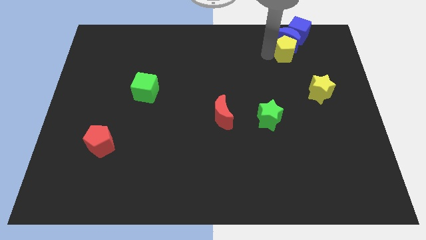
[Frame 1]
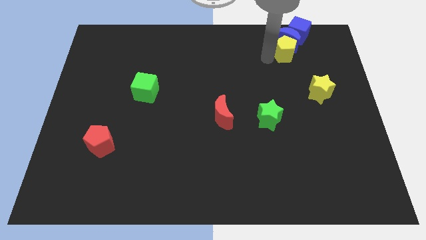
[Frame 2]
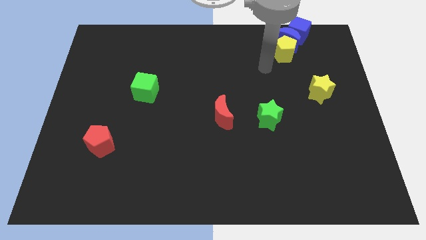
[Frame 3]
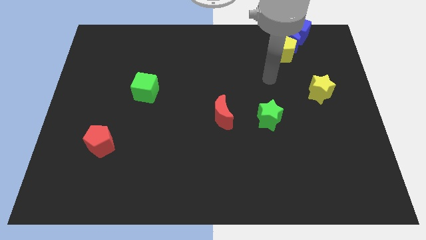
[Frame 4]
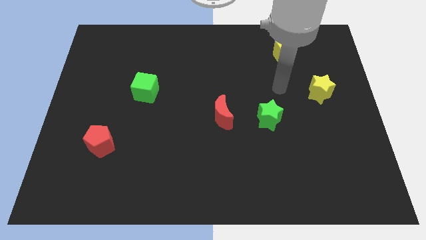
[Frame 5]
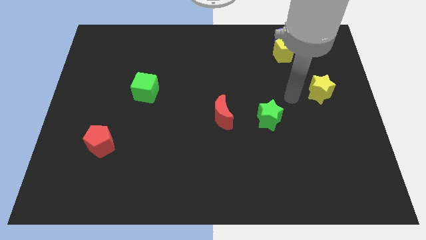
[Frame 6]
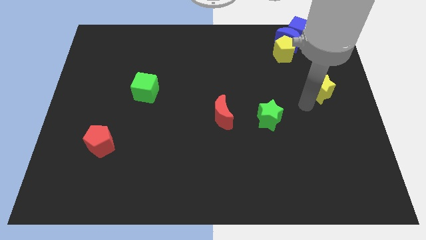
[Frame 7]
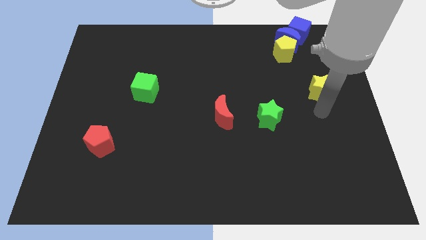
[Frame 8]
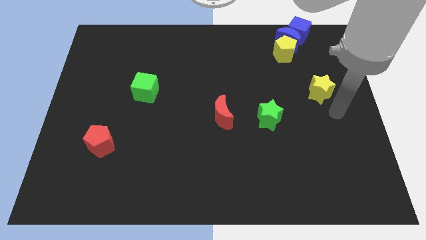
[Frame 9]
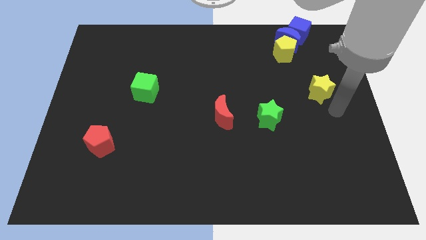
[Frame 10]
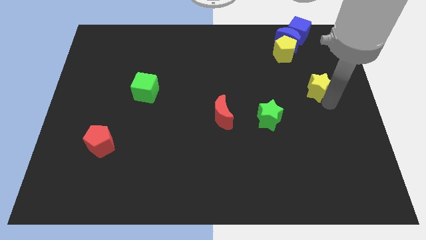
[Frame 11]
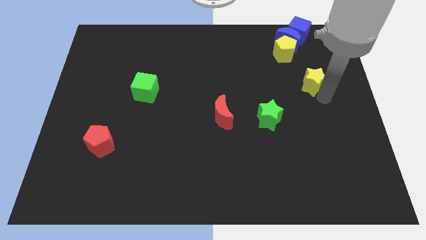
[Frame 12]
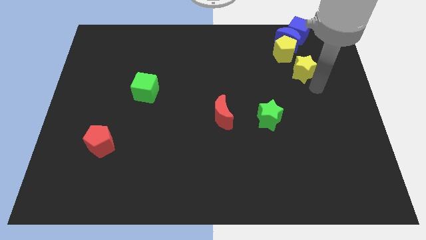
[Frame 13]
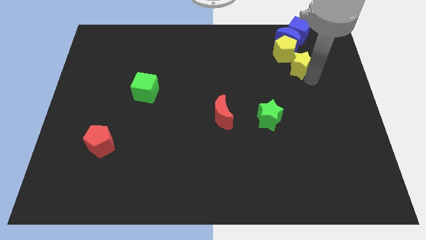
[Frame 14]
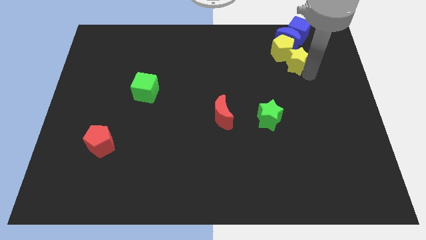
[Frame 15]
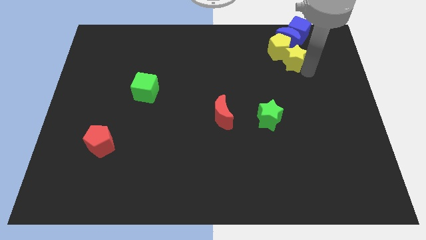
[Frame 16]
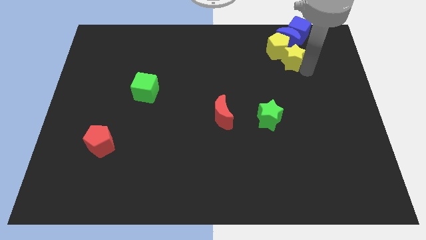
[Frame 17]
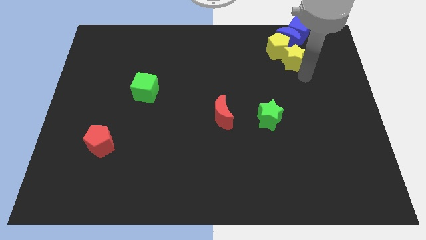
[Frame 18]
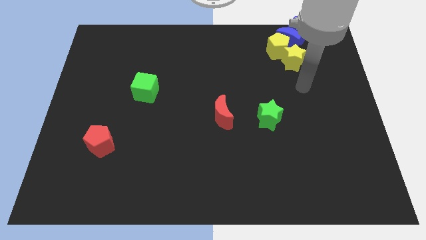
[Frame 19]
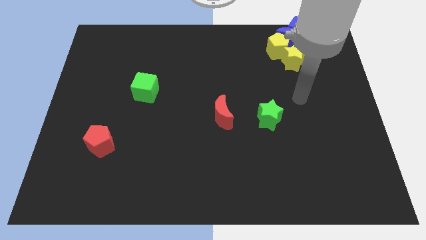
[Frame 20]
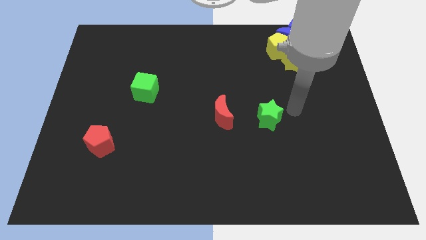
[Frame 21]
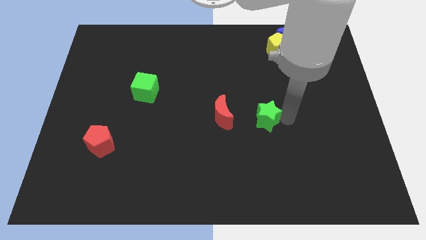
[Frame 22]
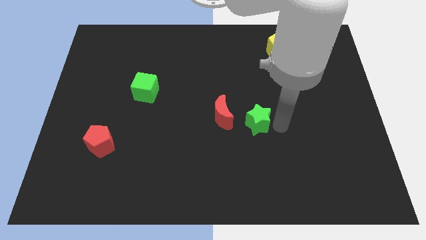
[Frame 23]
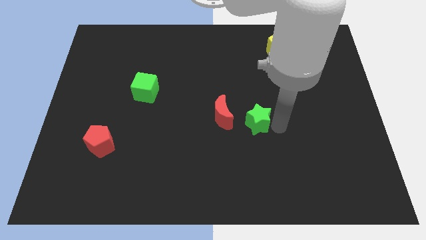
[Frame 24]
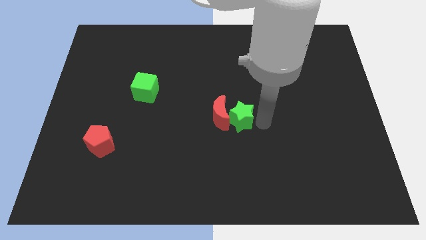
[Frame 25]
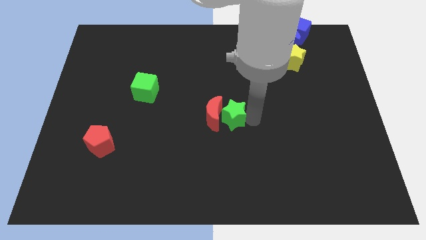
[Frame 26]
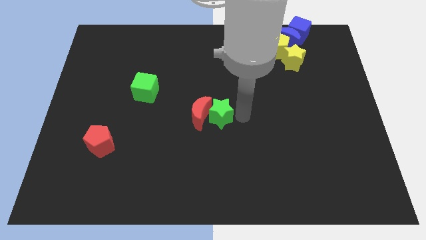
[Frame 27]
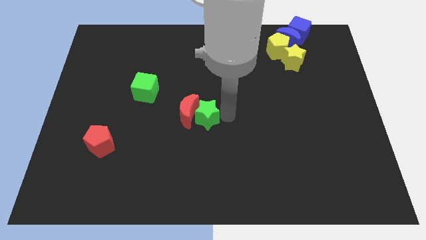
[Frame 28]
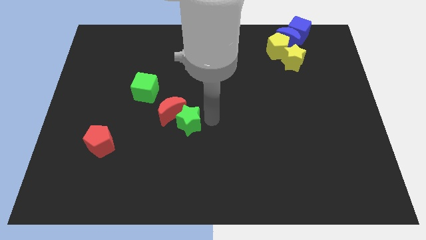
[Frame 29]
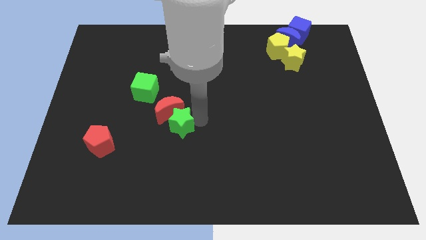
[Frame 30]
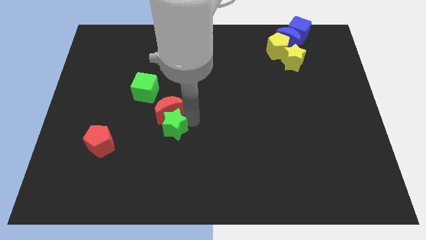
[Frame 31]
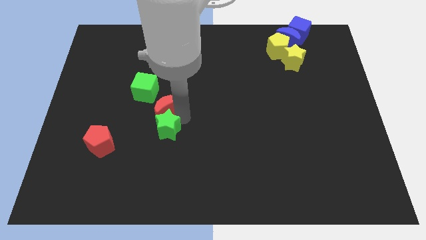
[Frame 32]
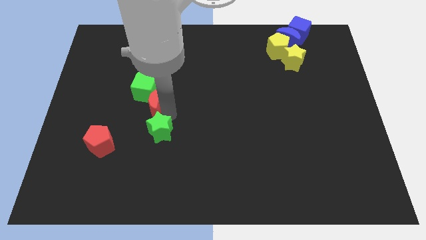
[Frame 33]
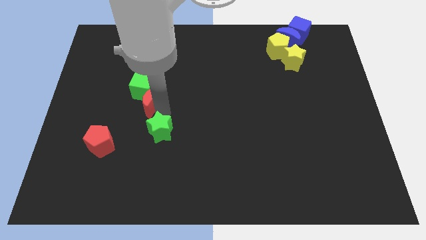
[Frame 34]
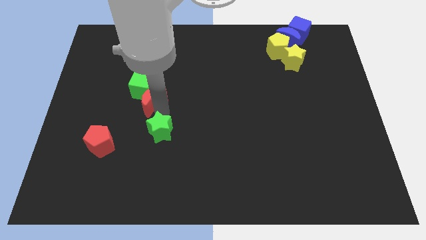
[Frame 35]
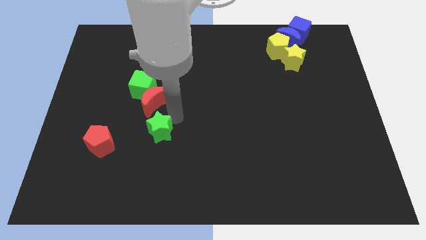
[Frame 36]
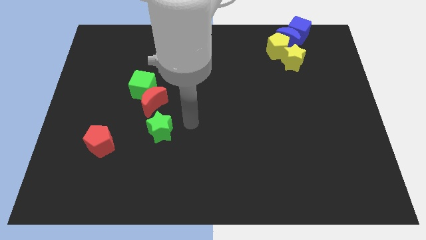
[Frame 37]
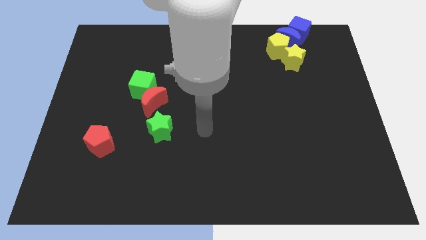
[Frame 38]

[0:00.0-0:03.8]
push yellow star into

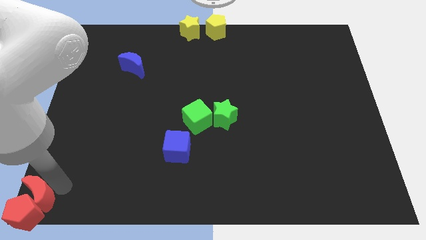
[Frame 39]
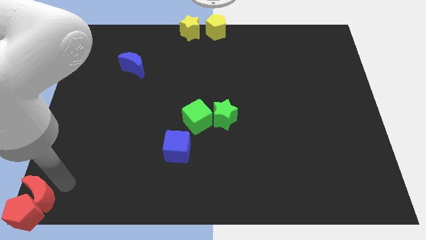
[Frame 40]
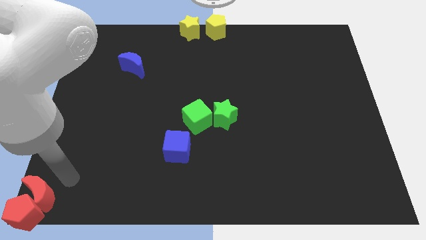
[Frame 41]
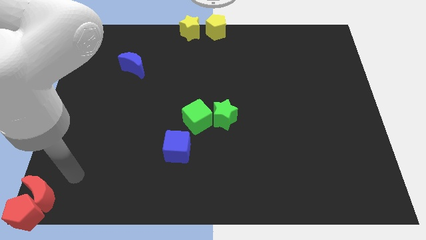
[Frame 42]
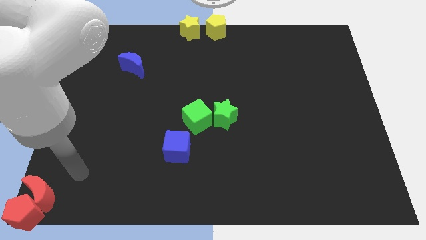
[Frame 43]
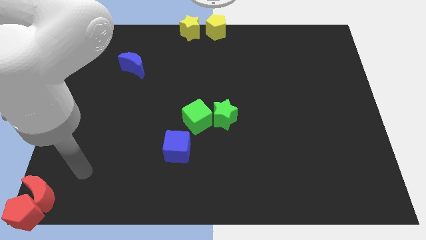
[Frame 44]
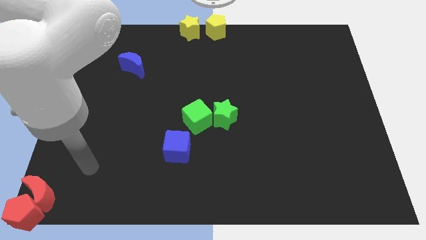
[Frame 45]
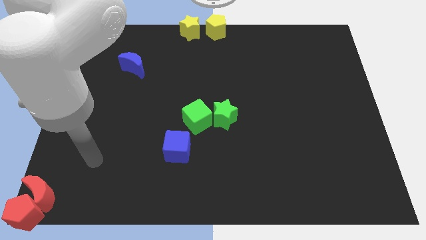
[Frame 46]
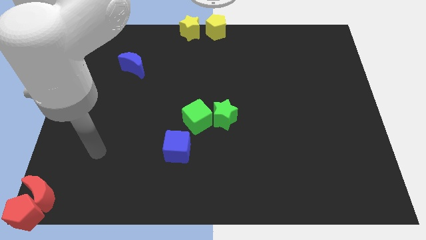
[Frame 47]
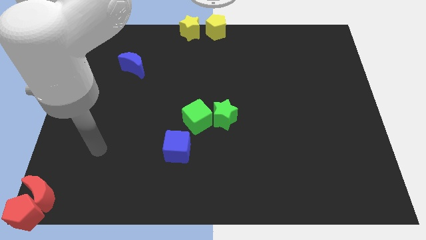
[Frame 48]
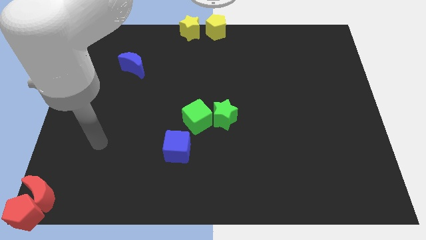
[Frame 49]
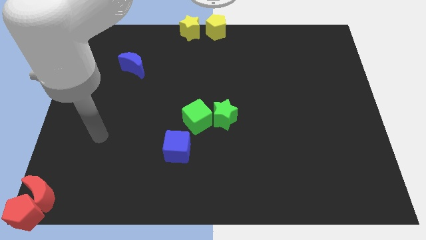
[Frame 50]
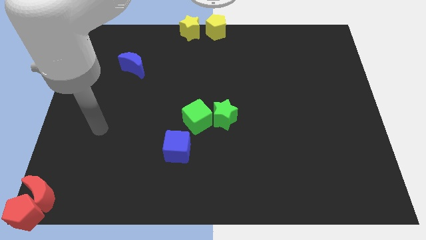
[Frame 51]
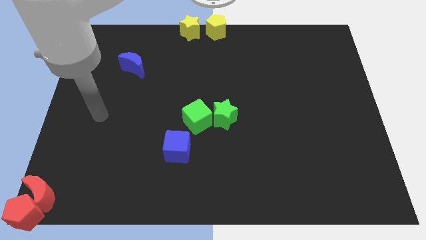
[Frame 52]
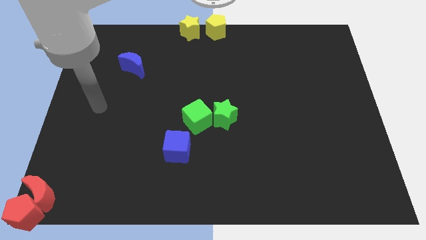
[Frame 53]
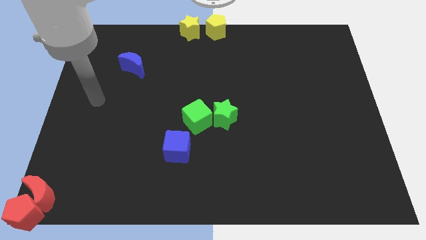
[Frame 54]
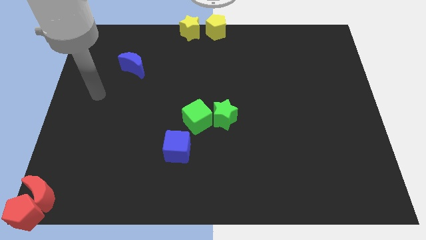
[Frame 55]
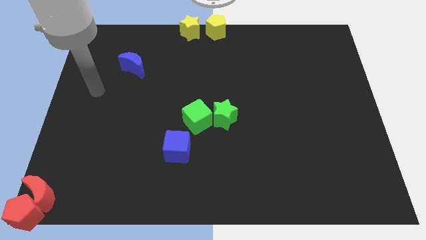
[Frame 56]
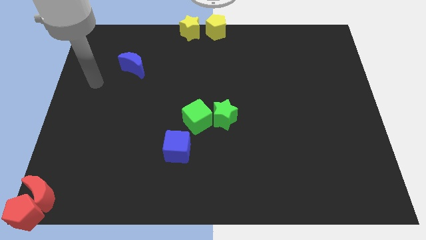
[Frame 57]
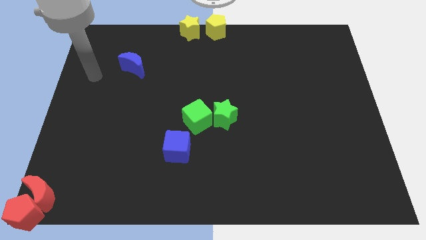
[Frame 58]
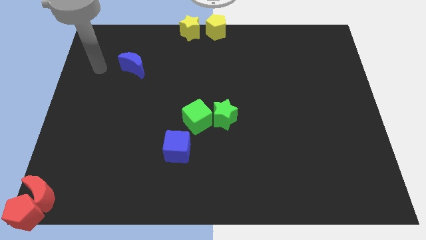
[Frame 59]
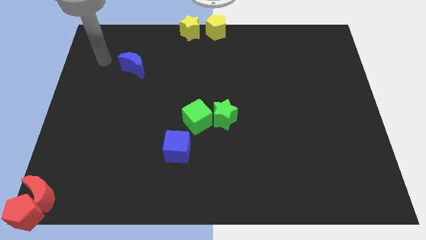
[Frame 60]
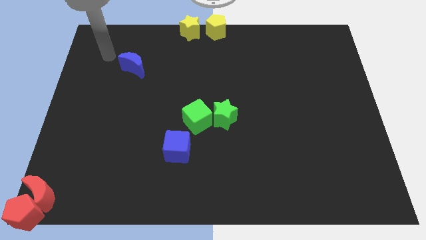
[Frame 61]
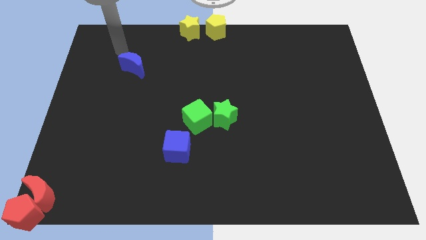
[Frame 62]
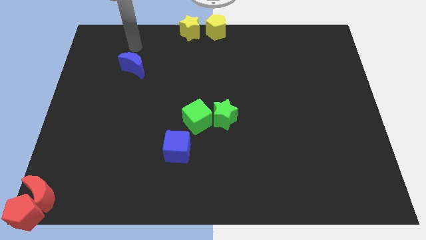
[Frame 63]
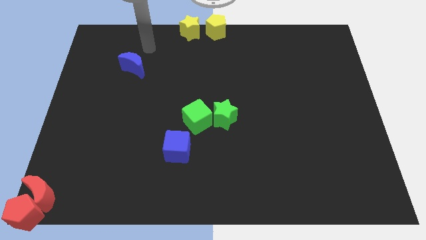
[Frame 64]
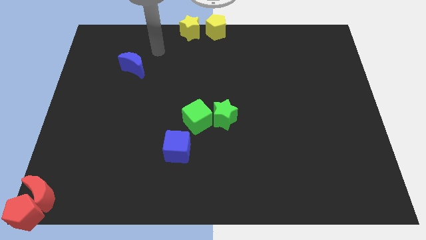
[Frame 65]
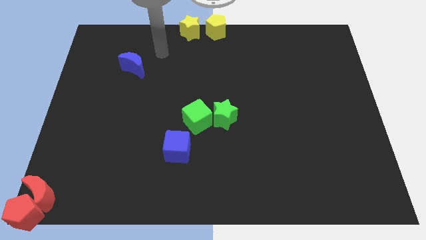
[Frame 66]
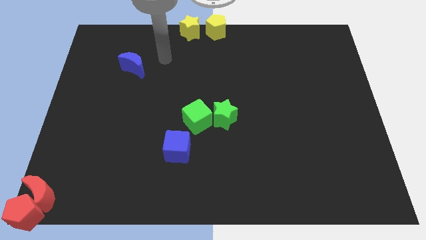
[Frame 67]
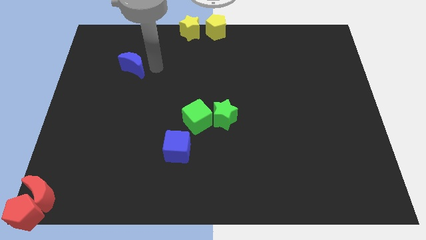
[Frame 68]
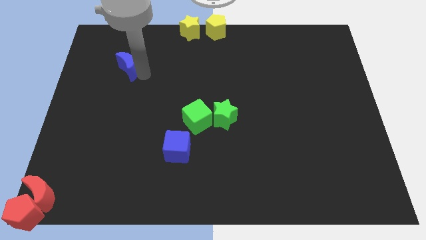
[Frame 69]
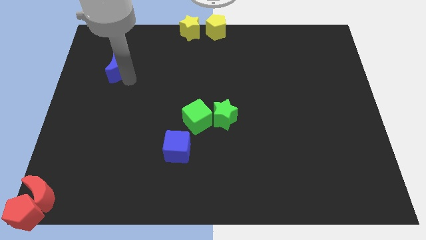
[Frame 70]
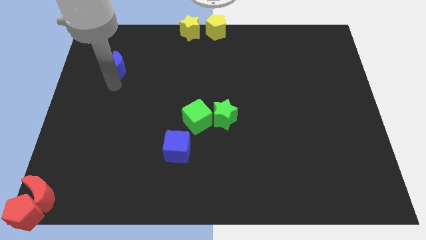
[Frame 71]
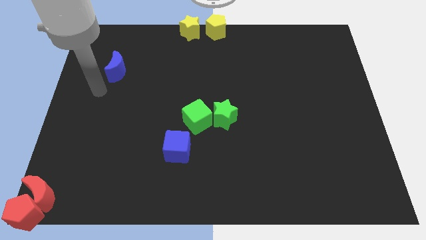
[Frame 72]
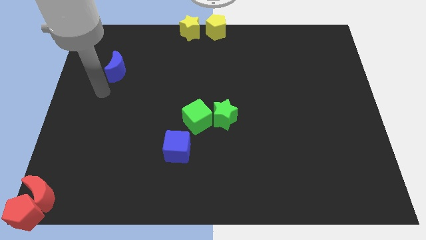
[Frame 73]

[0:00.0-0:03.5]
move the blue moon to the left side

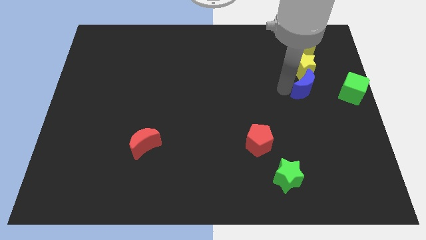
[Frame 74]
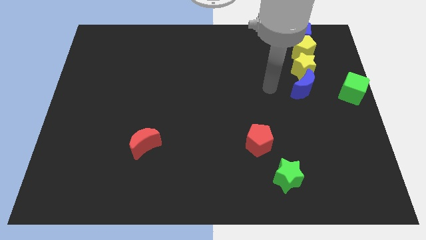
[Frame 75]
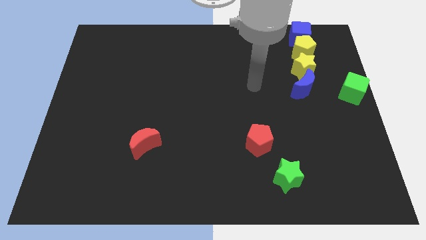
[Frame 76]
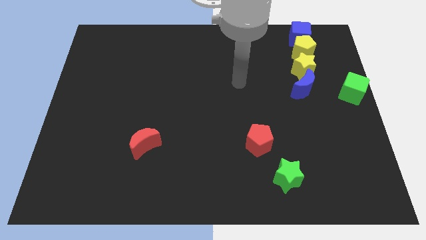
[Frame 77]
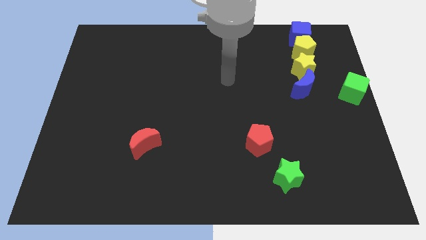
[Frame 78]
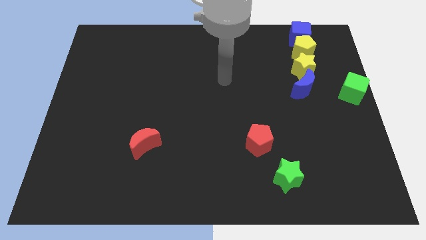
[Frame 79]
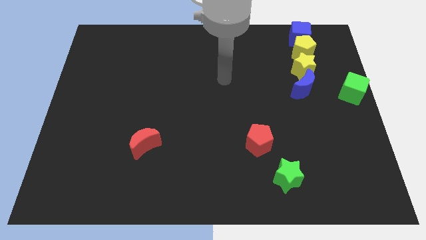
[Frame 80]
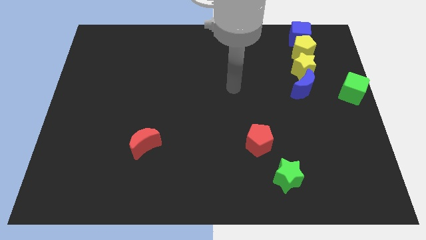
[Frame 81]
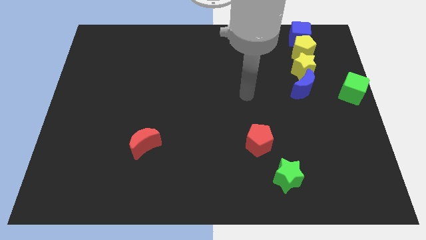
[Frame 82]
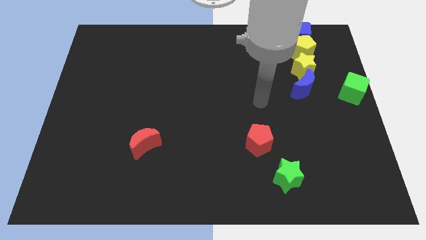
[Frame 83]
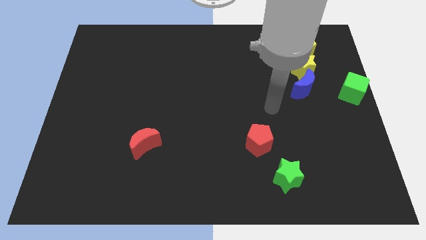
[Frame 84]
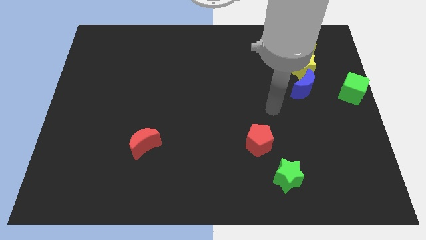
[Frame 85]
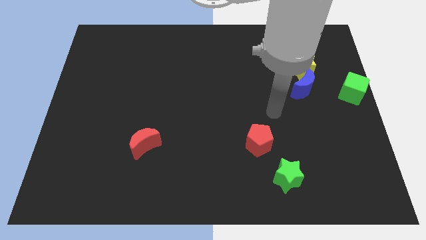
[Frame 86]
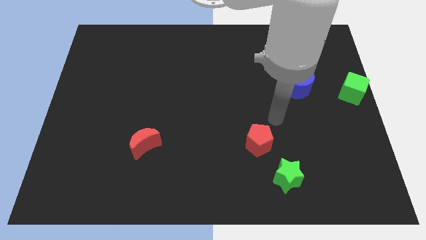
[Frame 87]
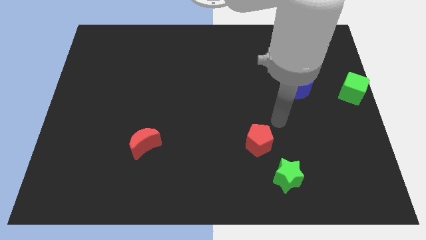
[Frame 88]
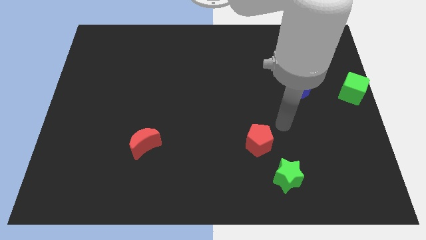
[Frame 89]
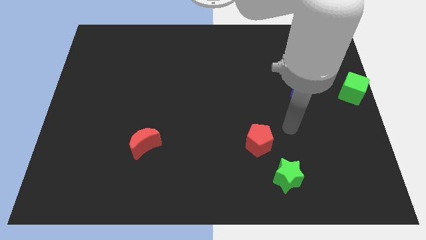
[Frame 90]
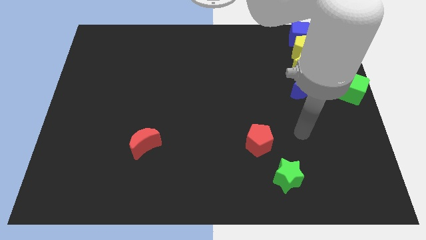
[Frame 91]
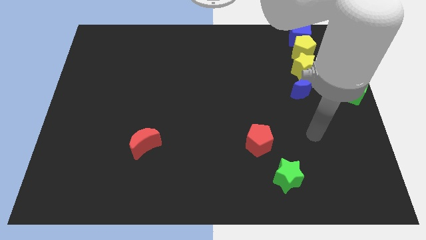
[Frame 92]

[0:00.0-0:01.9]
point your arm at the right of the red pentagon
